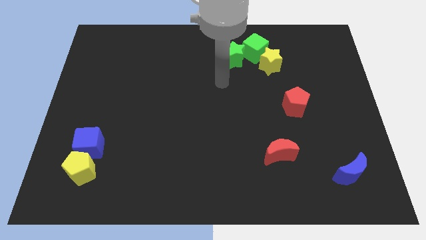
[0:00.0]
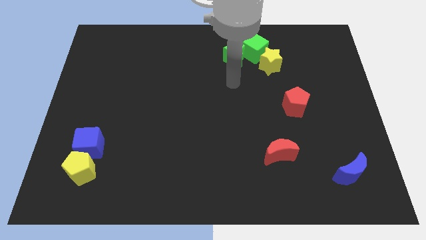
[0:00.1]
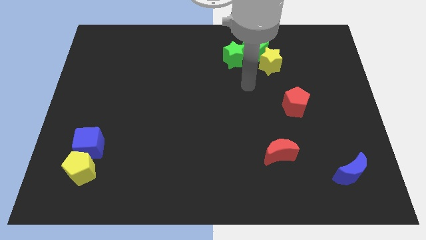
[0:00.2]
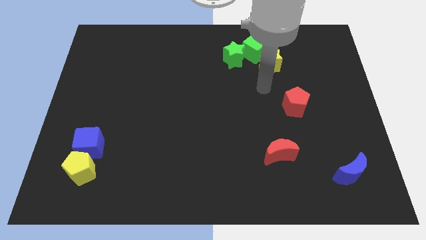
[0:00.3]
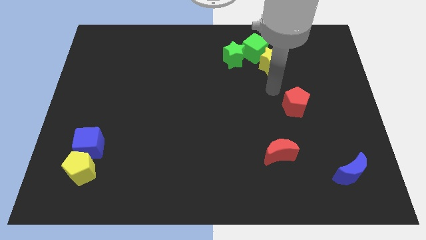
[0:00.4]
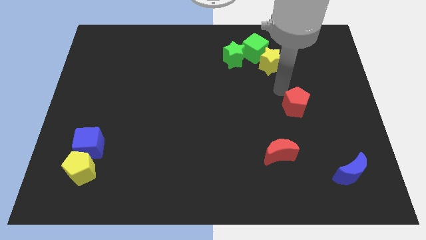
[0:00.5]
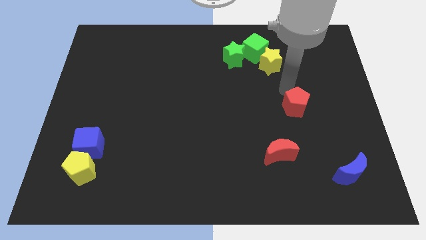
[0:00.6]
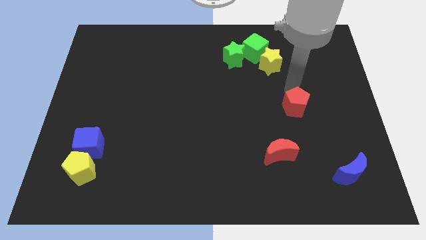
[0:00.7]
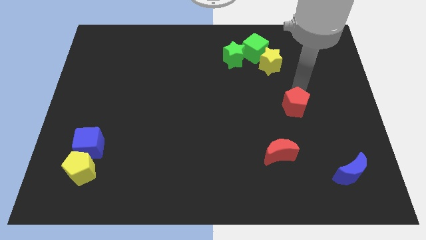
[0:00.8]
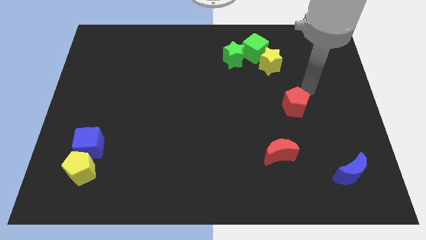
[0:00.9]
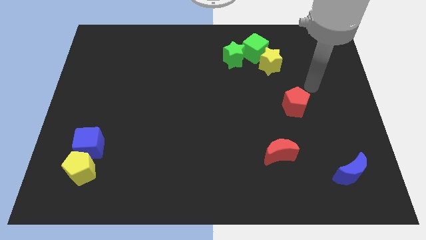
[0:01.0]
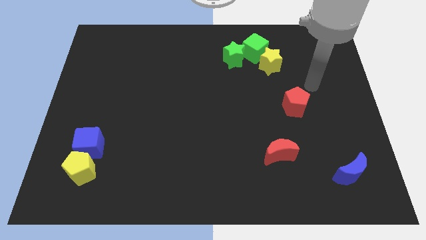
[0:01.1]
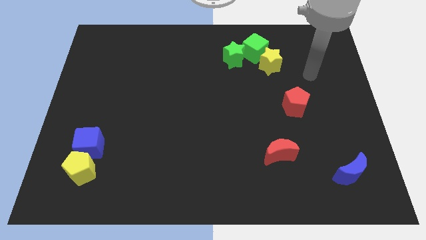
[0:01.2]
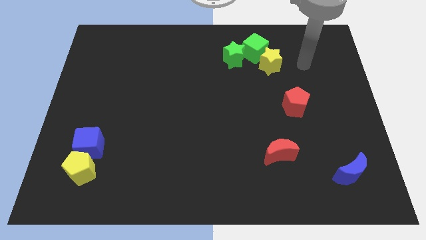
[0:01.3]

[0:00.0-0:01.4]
slide the arm towards the right of the yellow star

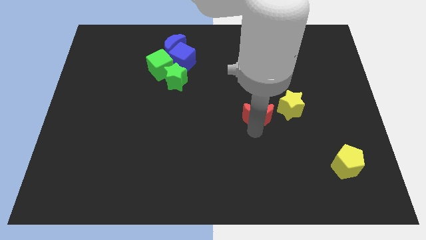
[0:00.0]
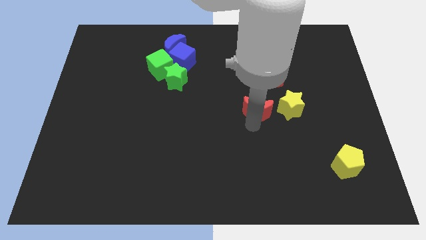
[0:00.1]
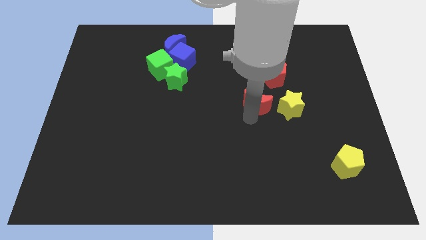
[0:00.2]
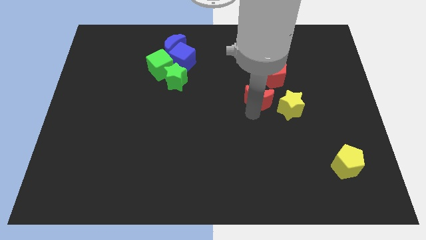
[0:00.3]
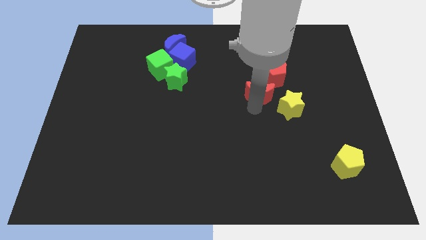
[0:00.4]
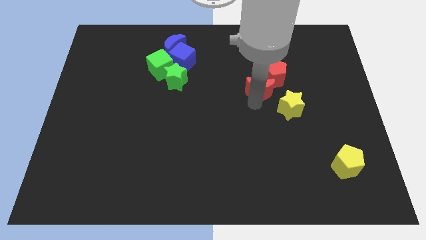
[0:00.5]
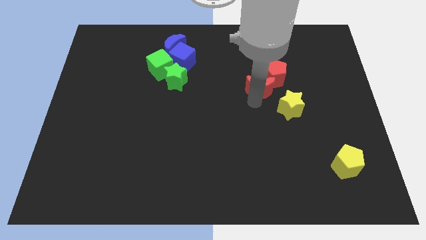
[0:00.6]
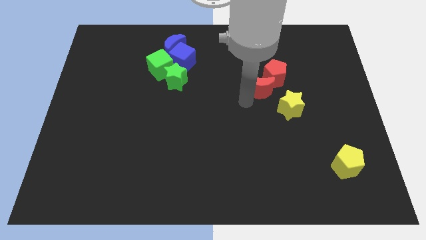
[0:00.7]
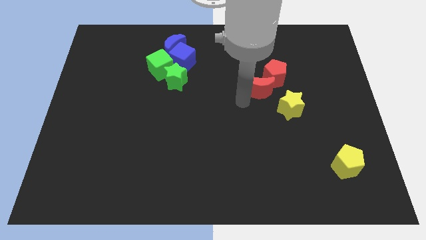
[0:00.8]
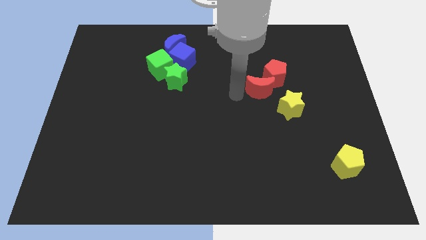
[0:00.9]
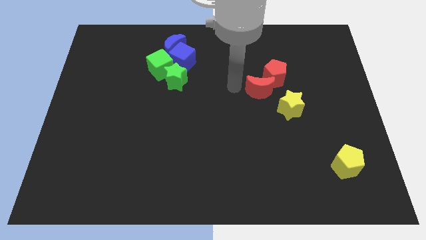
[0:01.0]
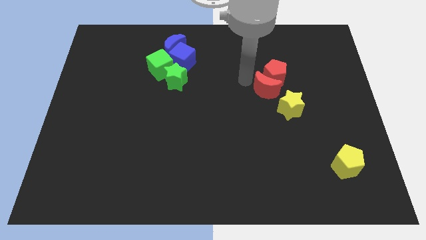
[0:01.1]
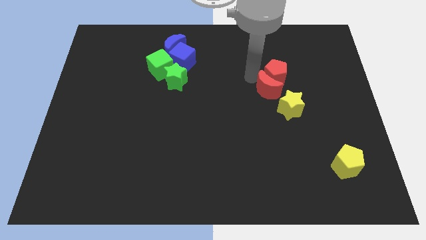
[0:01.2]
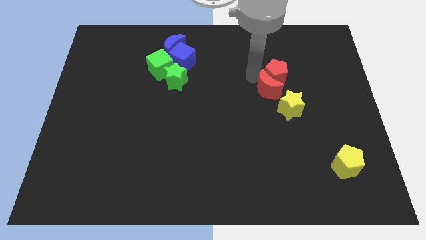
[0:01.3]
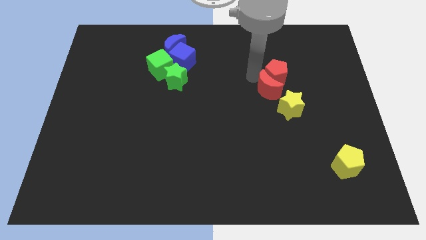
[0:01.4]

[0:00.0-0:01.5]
move the red crescent into the red pentagon to the top of yellow star

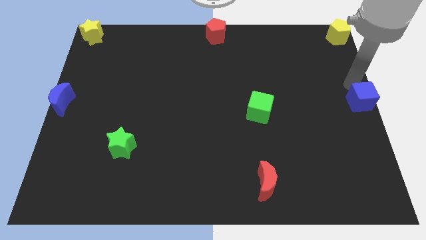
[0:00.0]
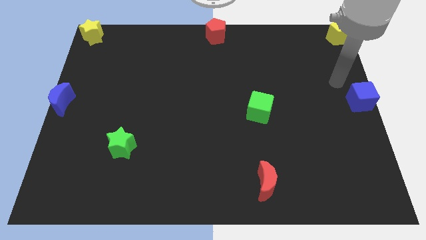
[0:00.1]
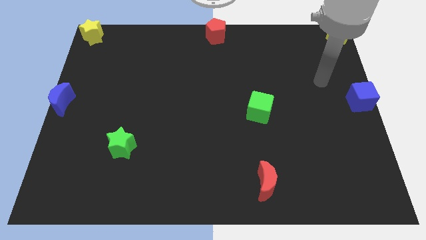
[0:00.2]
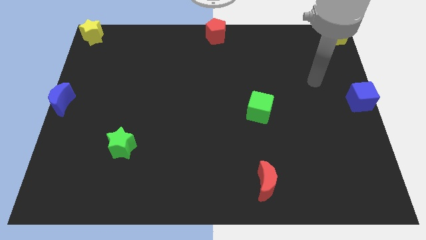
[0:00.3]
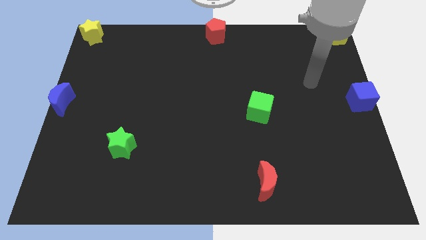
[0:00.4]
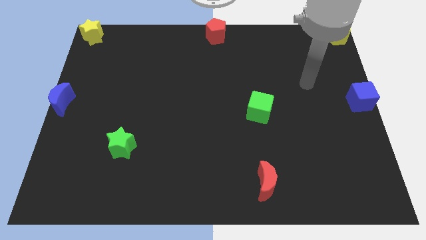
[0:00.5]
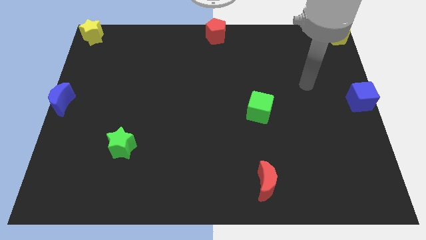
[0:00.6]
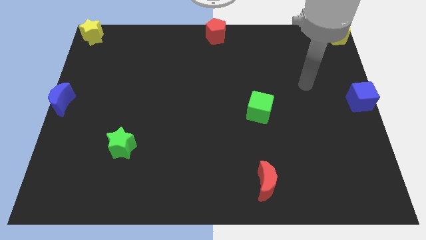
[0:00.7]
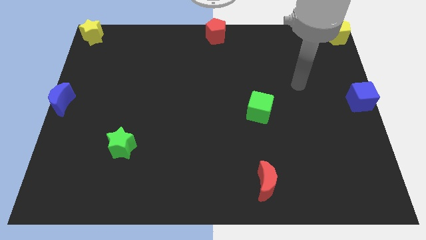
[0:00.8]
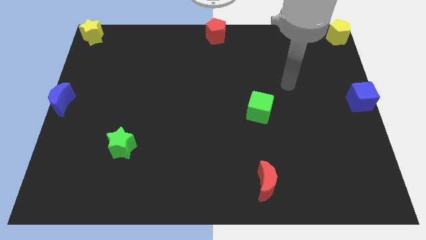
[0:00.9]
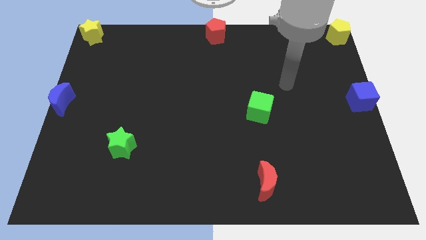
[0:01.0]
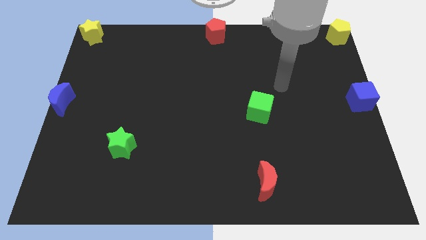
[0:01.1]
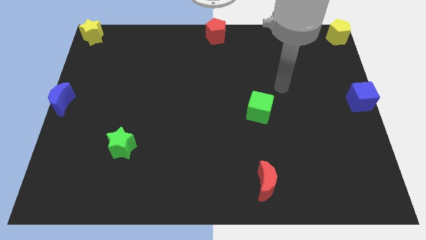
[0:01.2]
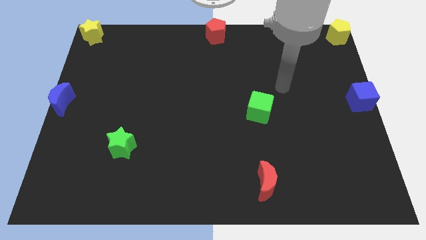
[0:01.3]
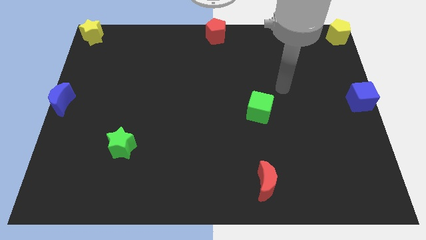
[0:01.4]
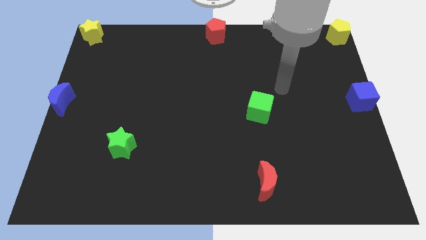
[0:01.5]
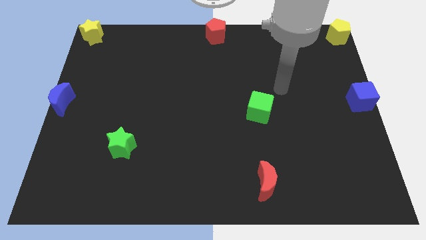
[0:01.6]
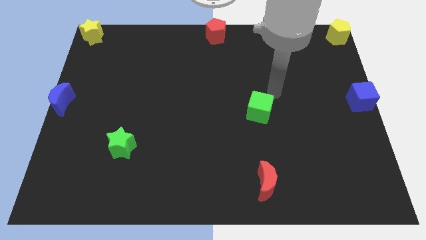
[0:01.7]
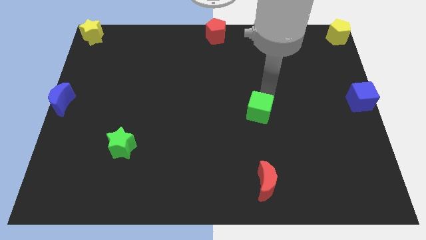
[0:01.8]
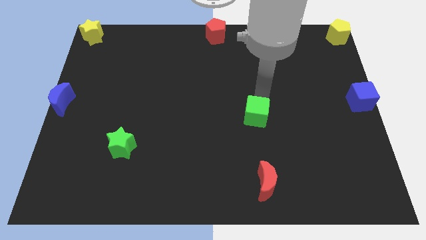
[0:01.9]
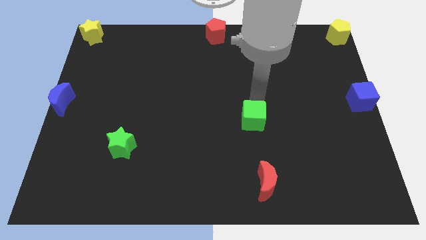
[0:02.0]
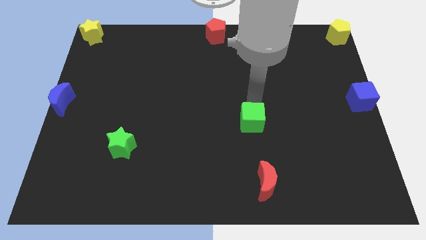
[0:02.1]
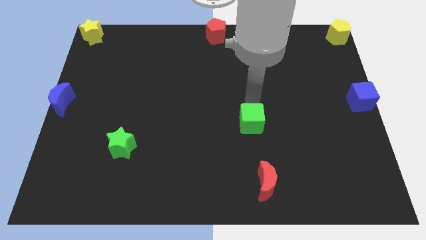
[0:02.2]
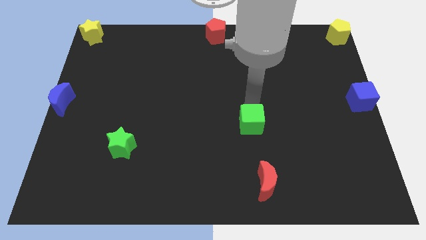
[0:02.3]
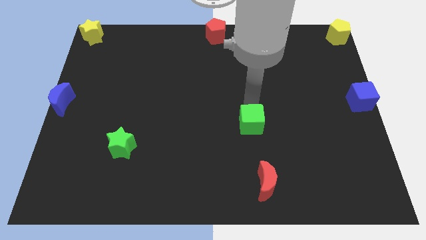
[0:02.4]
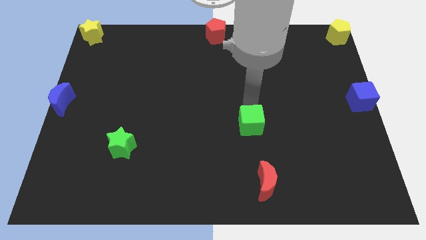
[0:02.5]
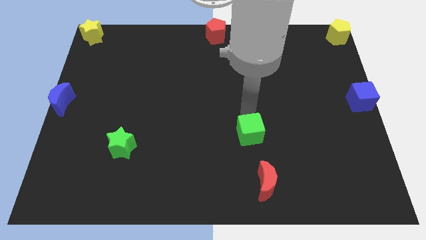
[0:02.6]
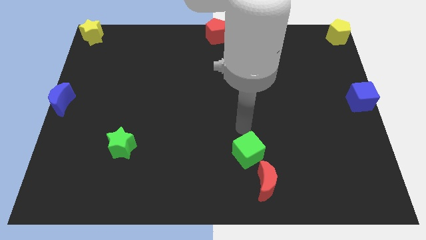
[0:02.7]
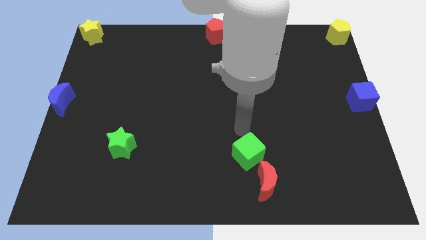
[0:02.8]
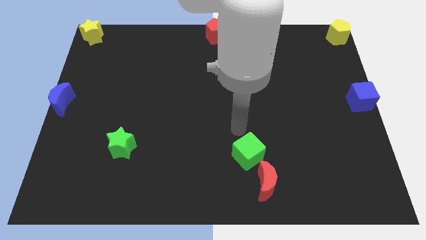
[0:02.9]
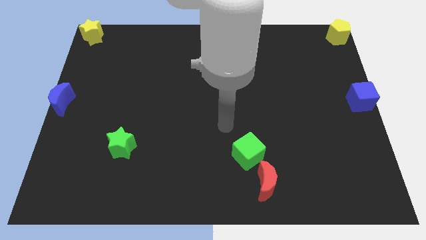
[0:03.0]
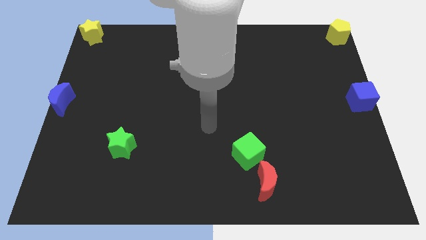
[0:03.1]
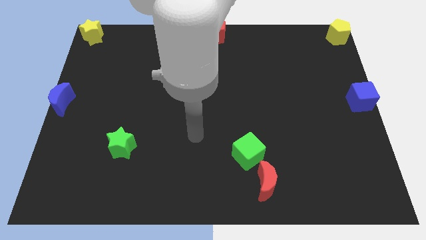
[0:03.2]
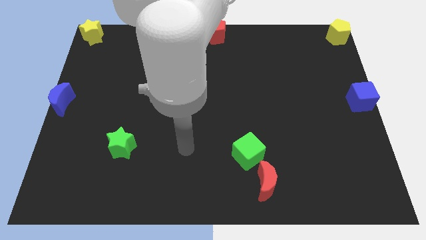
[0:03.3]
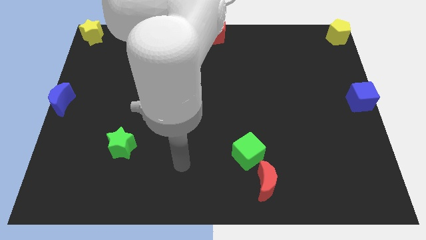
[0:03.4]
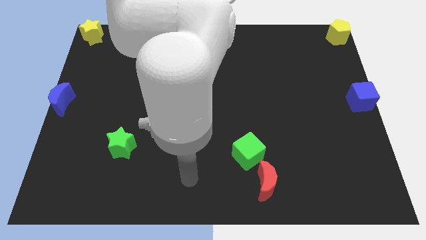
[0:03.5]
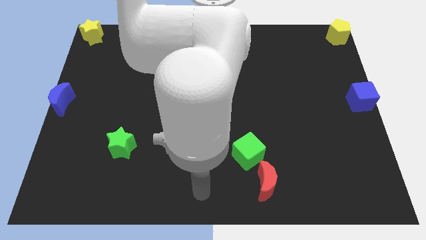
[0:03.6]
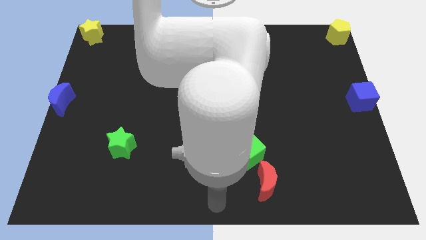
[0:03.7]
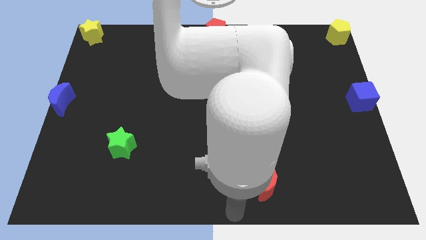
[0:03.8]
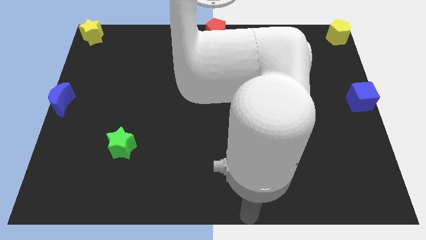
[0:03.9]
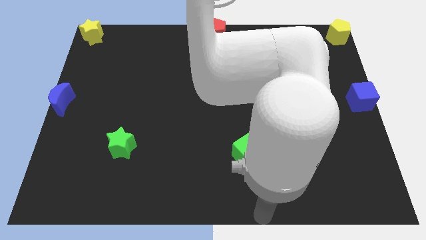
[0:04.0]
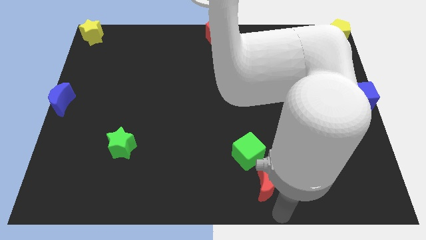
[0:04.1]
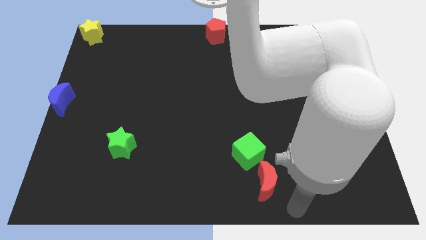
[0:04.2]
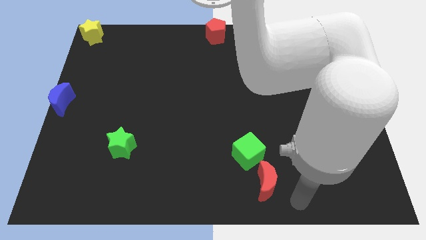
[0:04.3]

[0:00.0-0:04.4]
put the green cube above the red moon

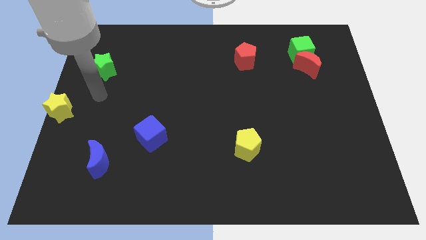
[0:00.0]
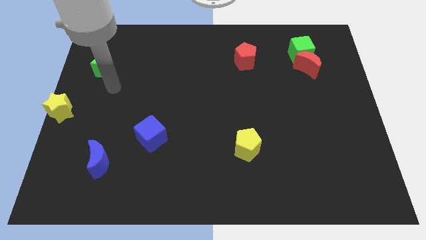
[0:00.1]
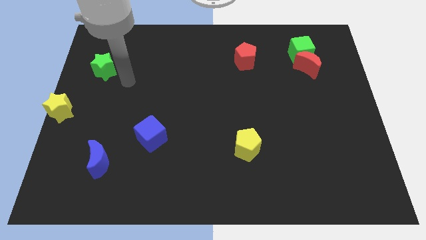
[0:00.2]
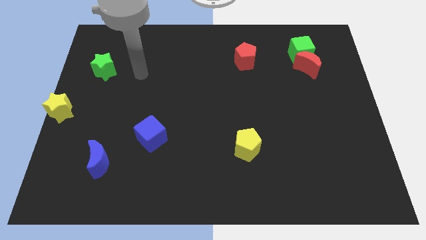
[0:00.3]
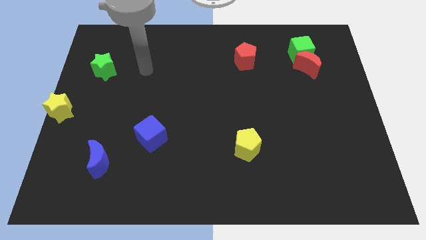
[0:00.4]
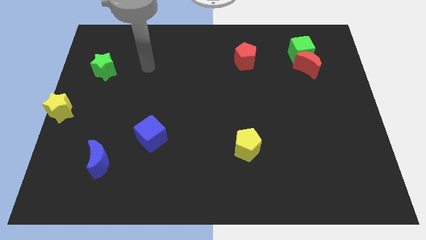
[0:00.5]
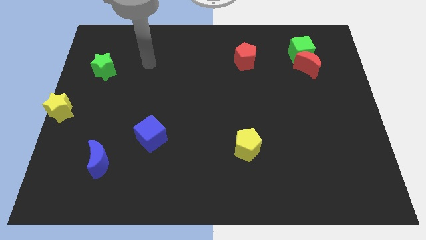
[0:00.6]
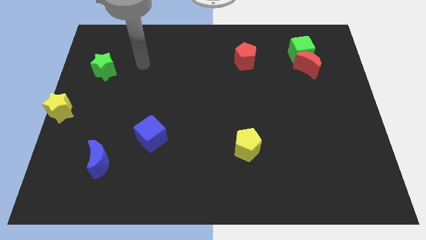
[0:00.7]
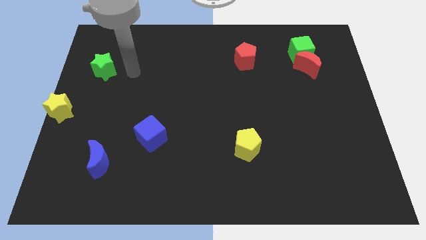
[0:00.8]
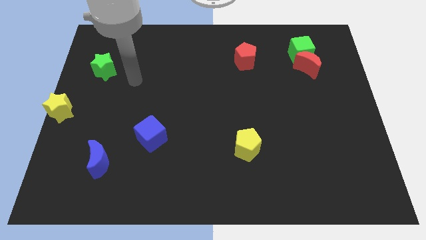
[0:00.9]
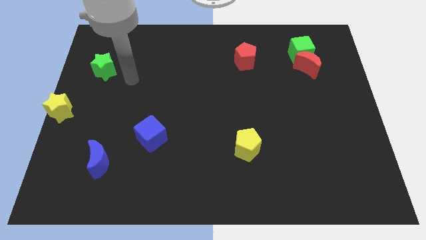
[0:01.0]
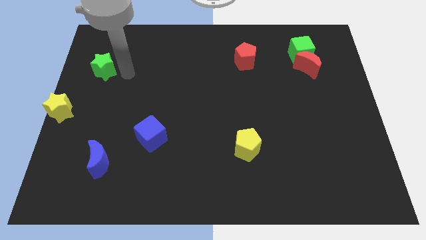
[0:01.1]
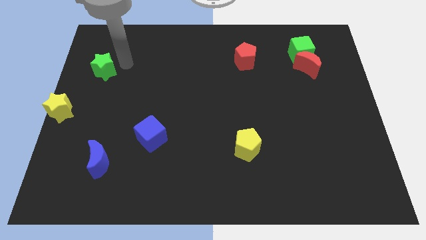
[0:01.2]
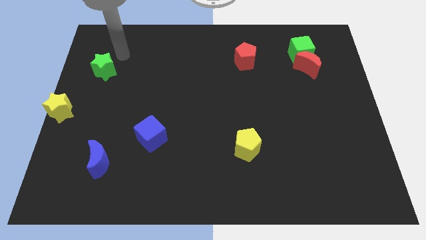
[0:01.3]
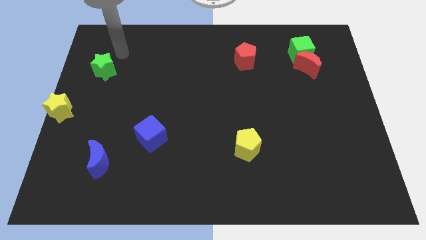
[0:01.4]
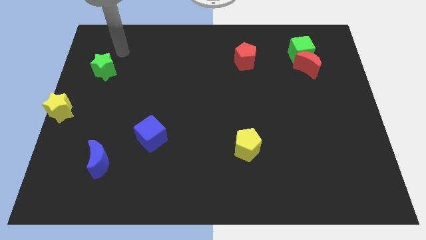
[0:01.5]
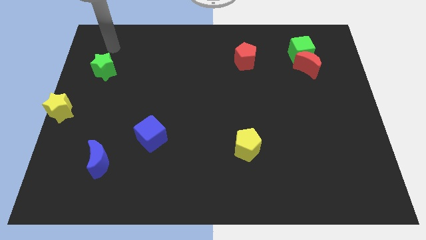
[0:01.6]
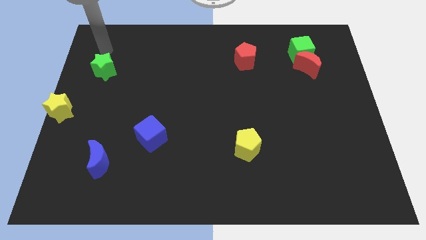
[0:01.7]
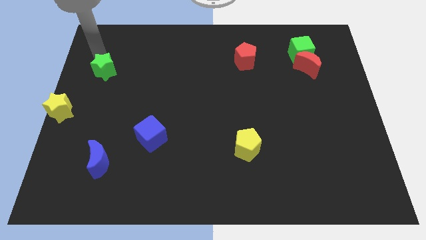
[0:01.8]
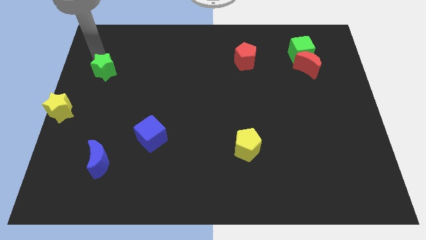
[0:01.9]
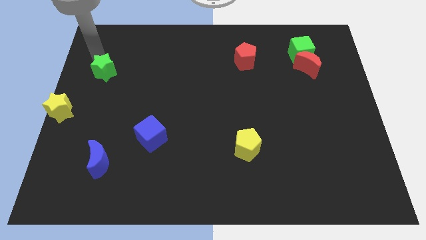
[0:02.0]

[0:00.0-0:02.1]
move the arm away from the yellow star
